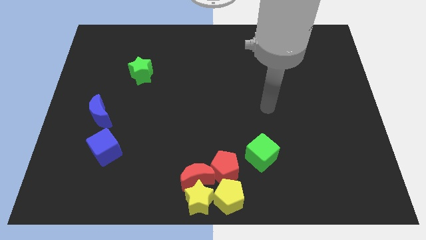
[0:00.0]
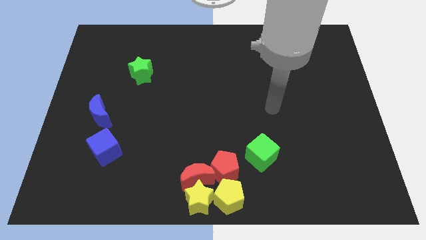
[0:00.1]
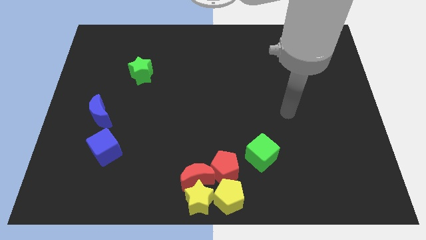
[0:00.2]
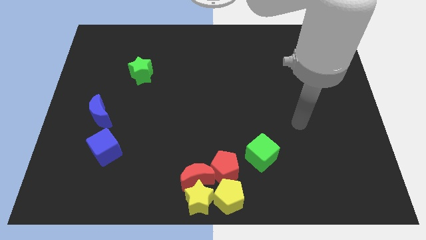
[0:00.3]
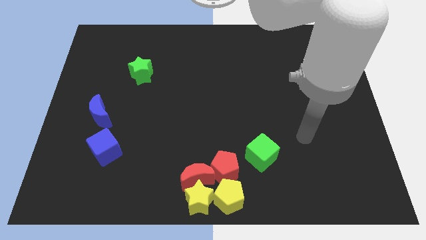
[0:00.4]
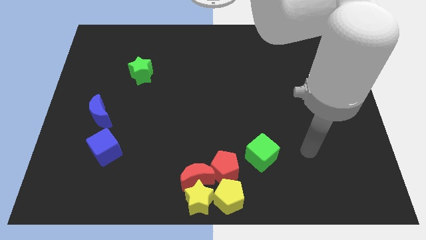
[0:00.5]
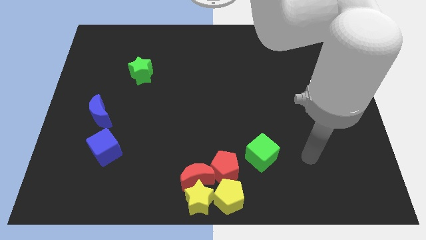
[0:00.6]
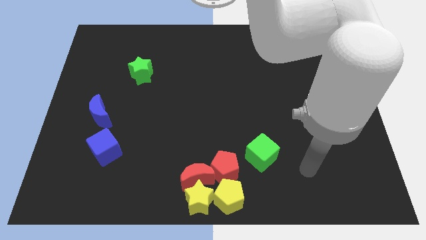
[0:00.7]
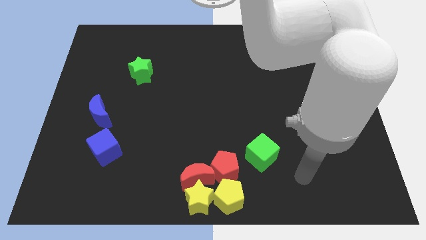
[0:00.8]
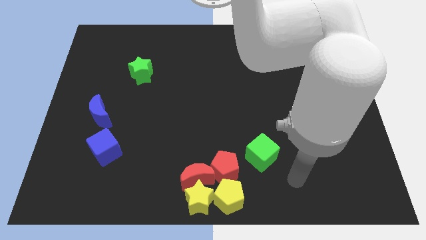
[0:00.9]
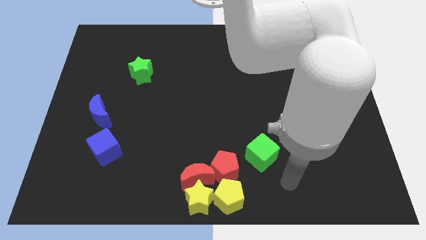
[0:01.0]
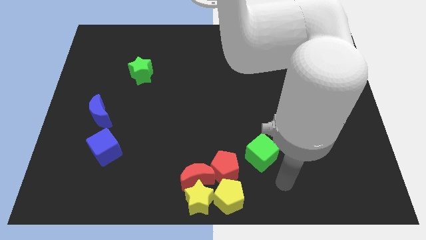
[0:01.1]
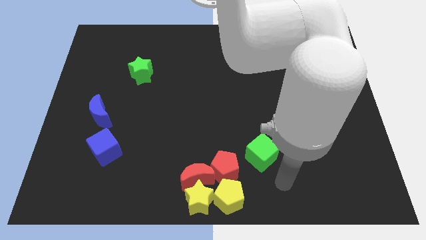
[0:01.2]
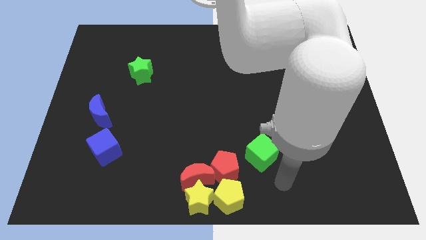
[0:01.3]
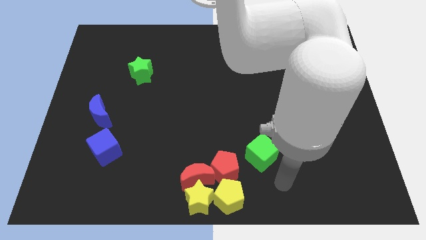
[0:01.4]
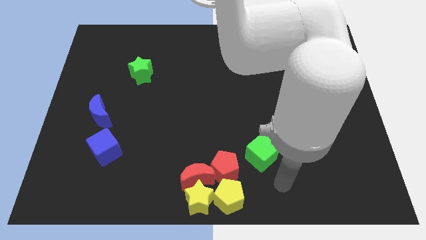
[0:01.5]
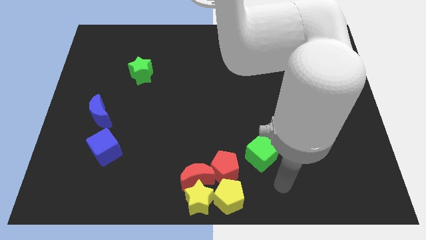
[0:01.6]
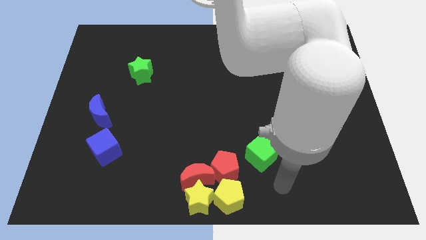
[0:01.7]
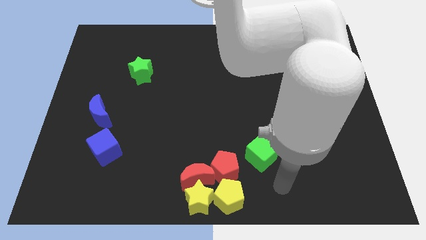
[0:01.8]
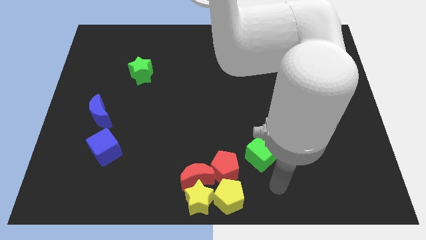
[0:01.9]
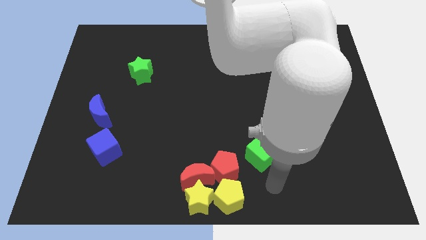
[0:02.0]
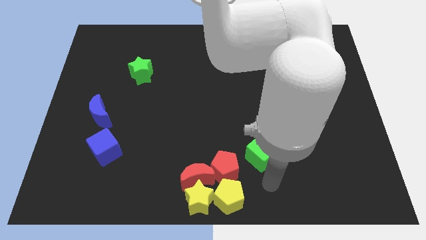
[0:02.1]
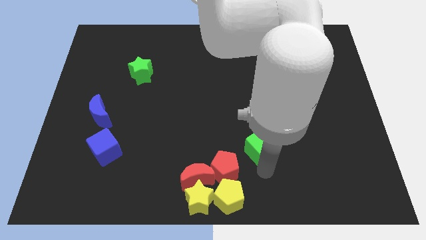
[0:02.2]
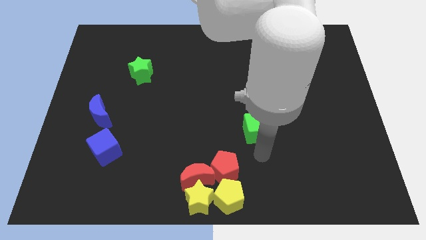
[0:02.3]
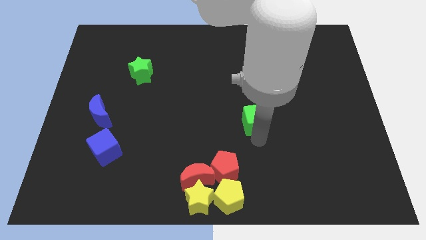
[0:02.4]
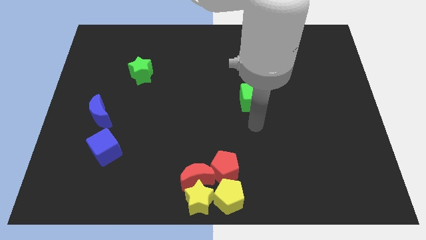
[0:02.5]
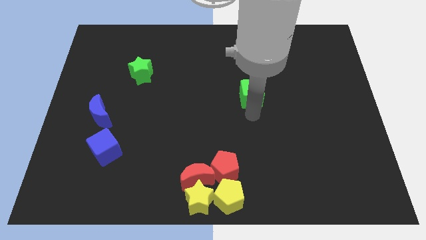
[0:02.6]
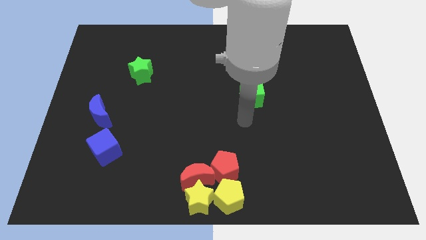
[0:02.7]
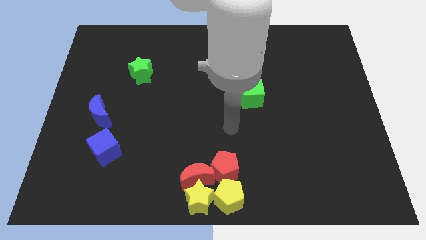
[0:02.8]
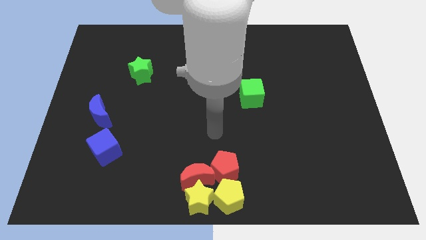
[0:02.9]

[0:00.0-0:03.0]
move the green cube slightly upwards

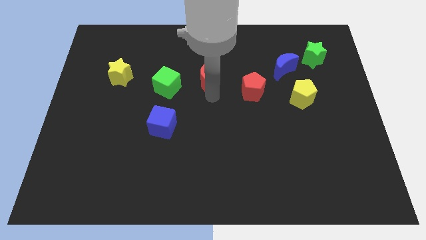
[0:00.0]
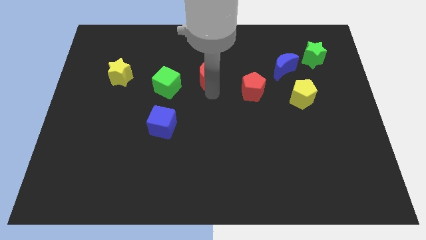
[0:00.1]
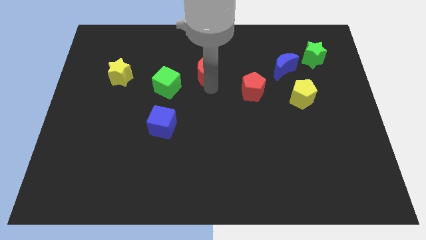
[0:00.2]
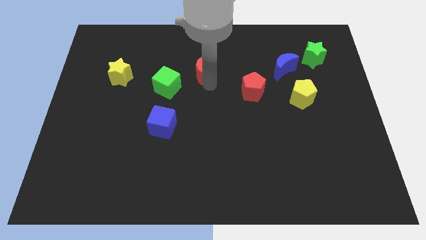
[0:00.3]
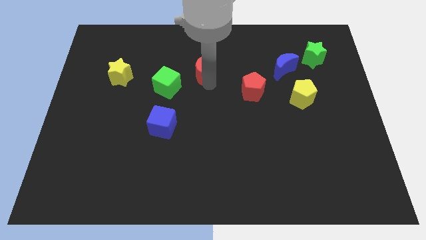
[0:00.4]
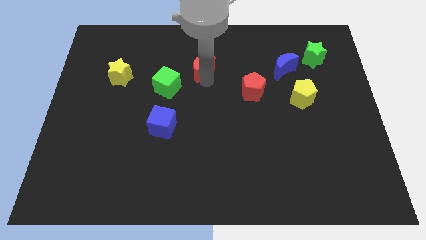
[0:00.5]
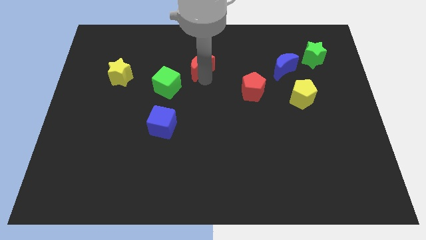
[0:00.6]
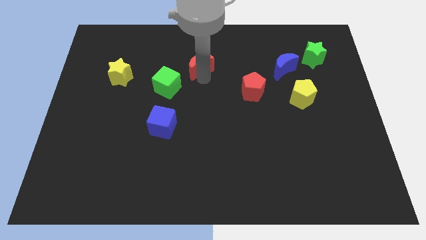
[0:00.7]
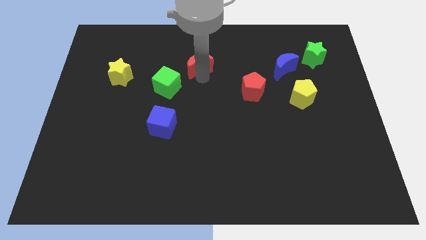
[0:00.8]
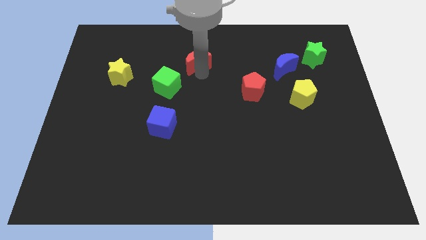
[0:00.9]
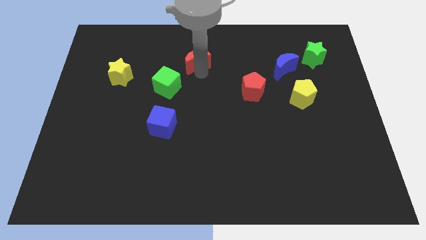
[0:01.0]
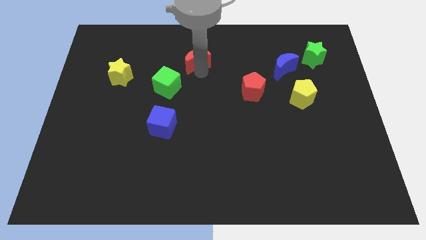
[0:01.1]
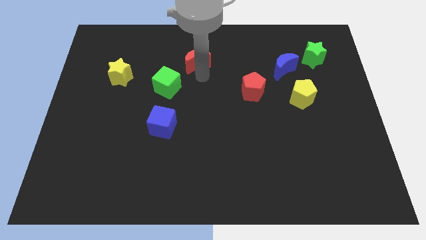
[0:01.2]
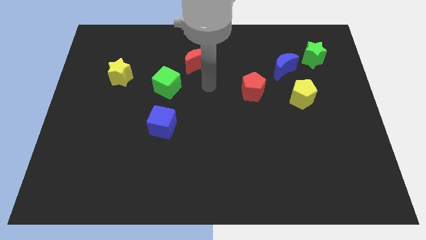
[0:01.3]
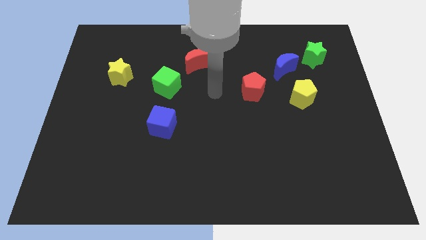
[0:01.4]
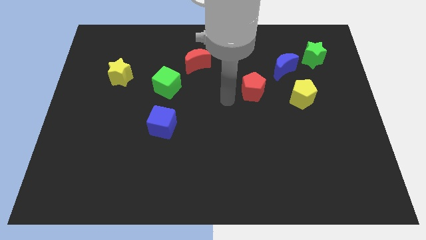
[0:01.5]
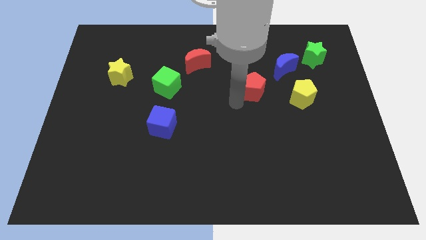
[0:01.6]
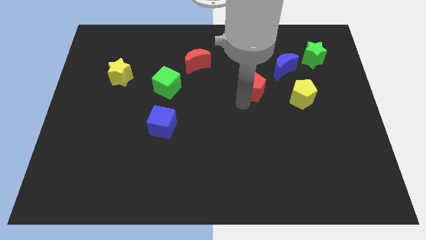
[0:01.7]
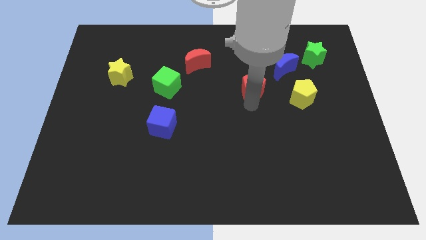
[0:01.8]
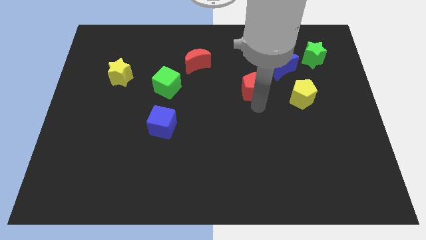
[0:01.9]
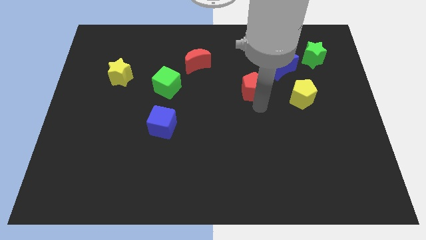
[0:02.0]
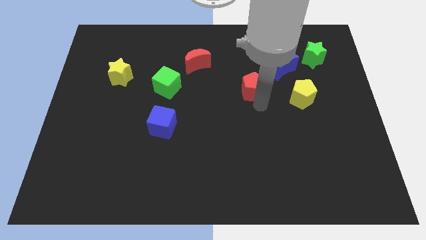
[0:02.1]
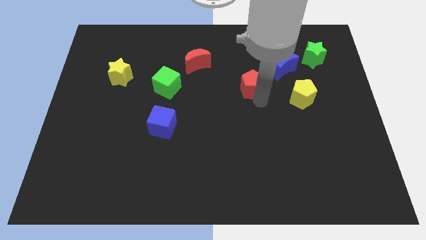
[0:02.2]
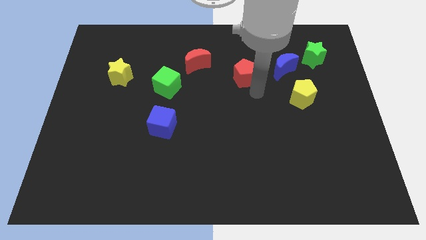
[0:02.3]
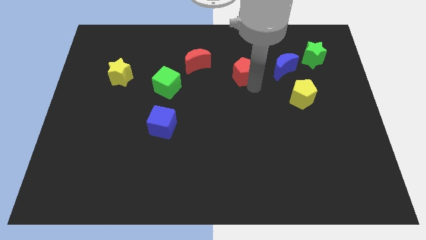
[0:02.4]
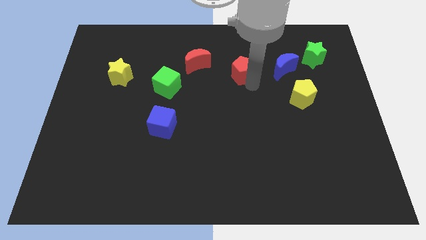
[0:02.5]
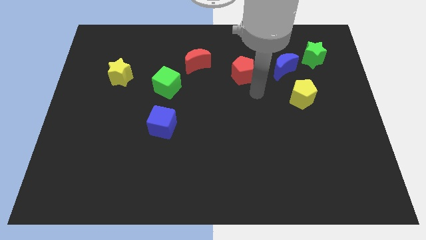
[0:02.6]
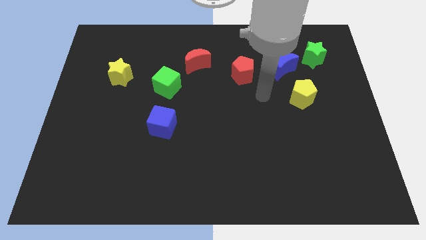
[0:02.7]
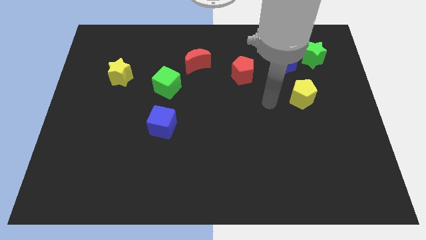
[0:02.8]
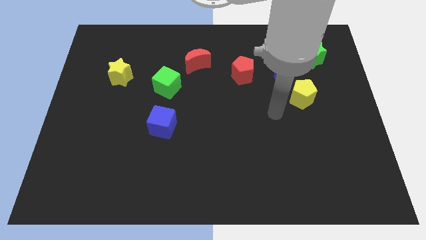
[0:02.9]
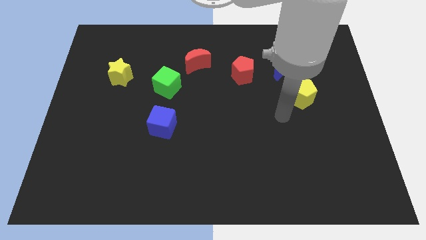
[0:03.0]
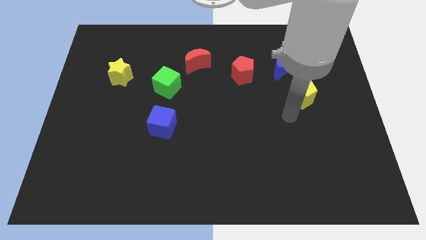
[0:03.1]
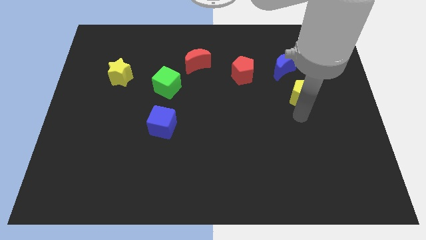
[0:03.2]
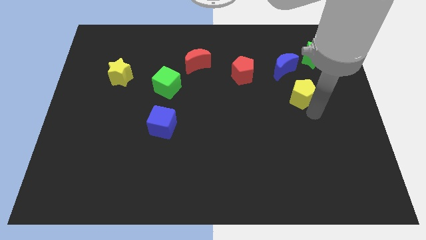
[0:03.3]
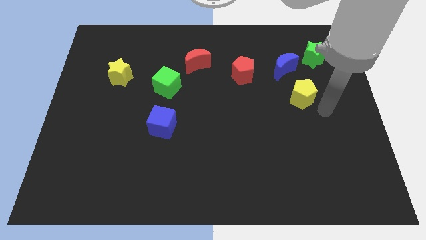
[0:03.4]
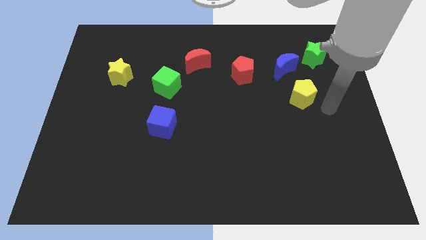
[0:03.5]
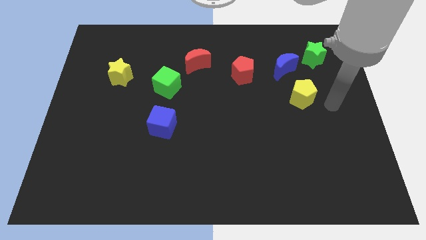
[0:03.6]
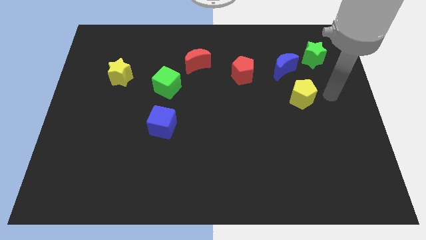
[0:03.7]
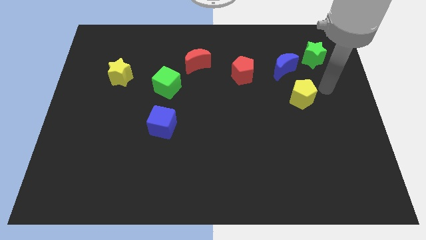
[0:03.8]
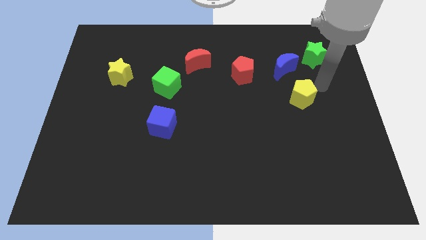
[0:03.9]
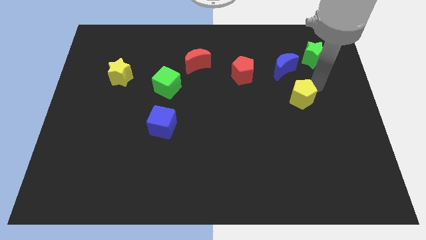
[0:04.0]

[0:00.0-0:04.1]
push the red blocks slightly to the top

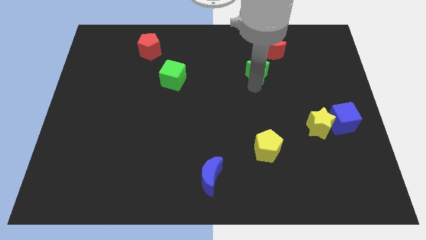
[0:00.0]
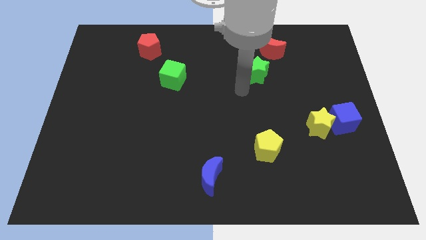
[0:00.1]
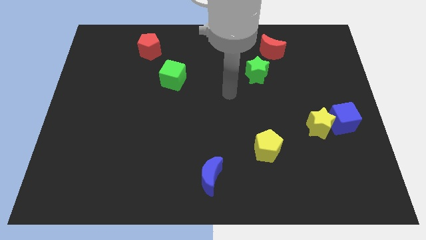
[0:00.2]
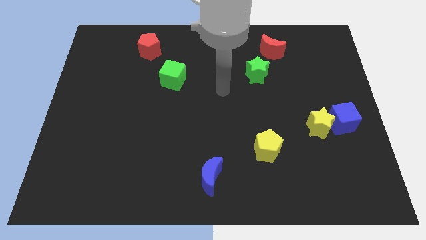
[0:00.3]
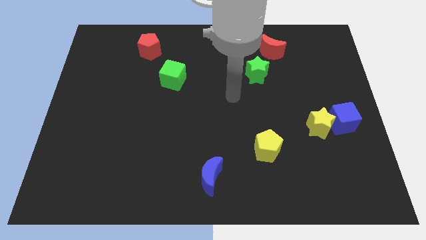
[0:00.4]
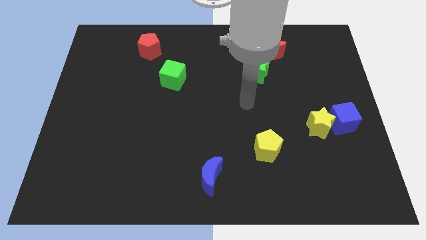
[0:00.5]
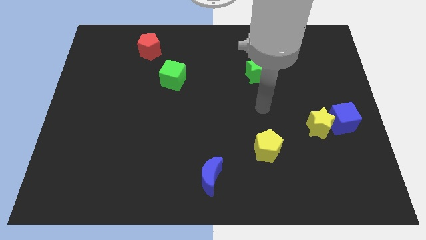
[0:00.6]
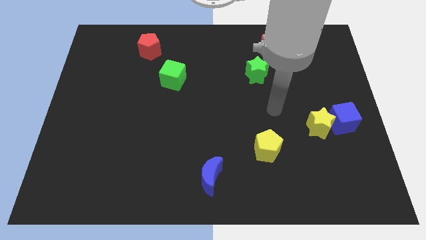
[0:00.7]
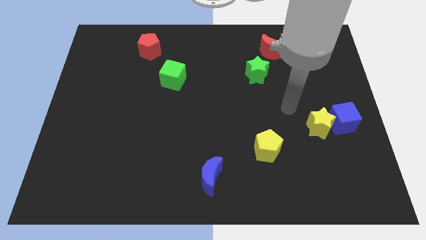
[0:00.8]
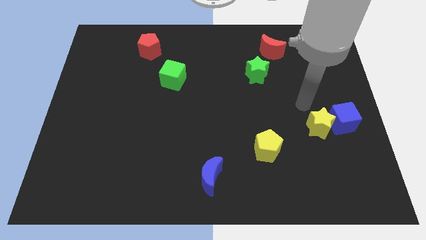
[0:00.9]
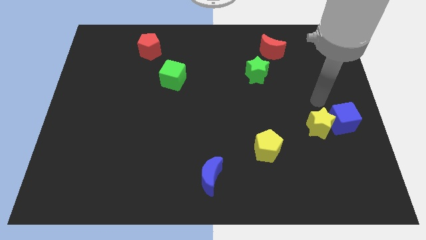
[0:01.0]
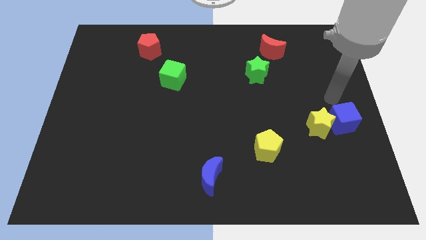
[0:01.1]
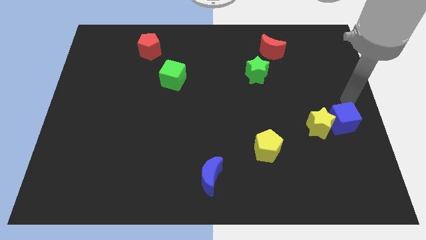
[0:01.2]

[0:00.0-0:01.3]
place your arm at the top right side of blue cube

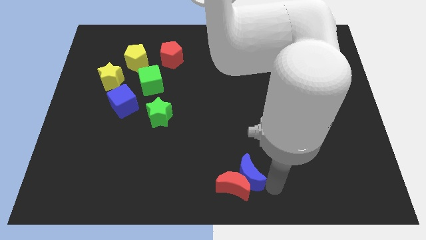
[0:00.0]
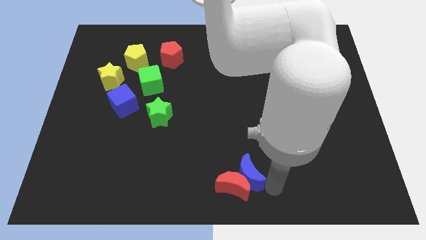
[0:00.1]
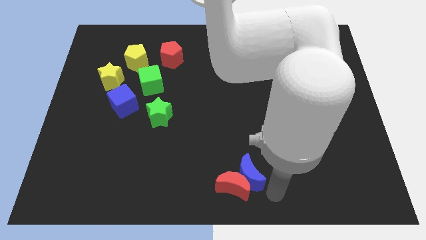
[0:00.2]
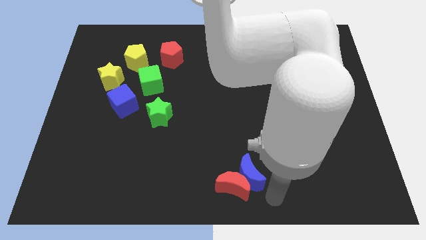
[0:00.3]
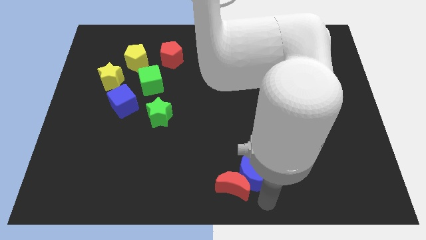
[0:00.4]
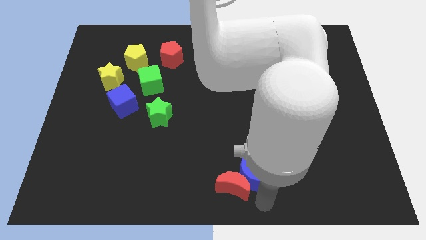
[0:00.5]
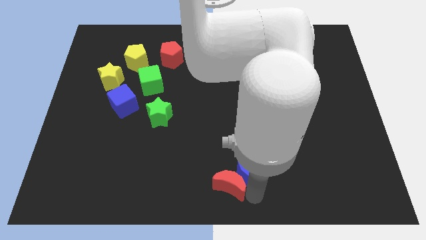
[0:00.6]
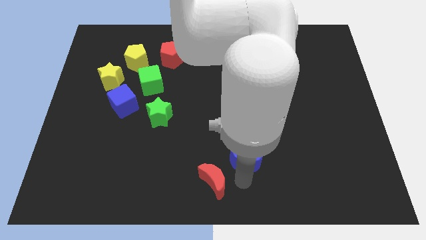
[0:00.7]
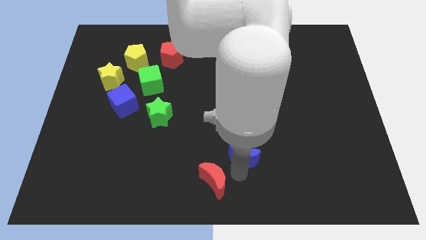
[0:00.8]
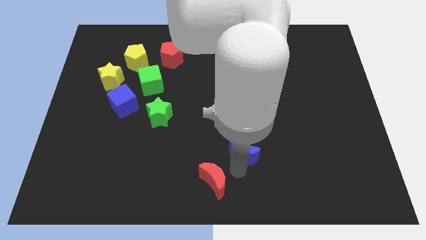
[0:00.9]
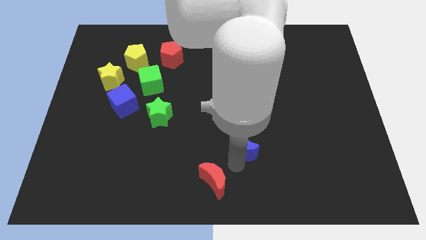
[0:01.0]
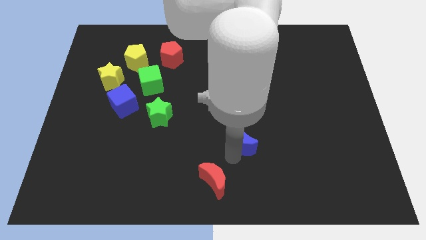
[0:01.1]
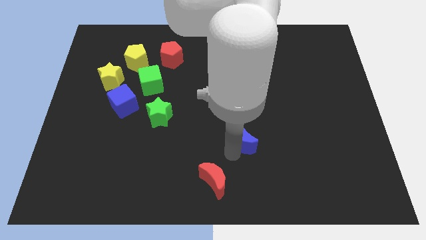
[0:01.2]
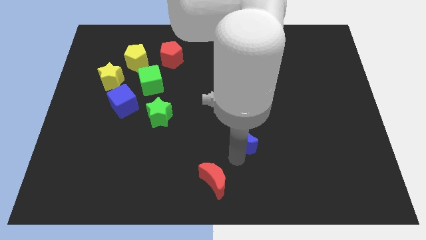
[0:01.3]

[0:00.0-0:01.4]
separate the blue moon from the red moon
